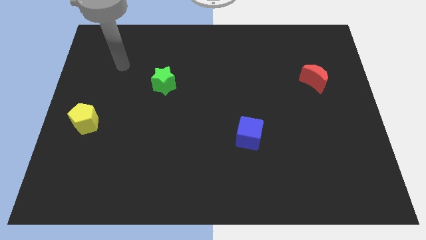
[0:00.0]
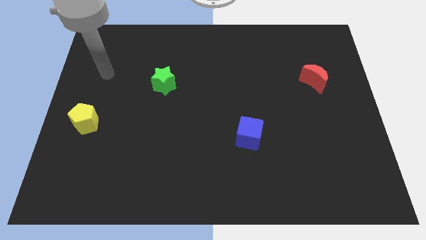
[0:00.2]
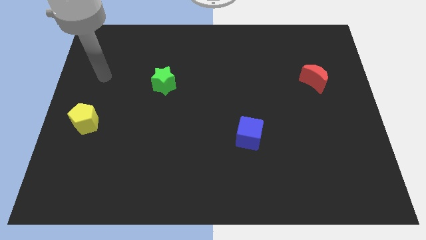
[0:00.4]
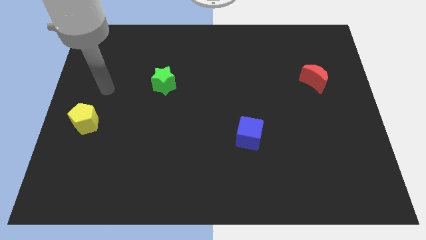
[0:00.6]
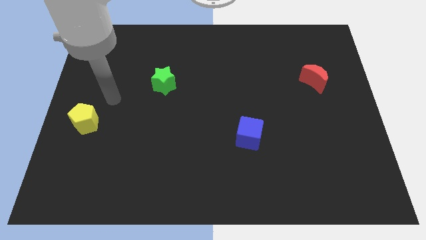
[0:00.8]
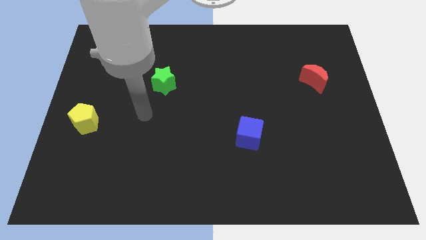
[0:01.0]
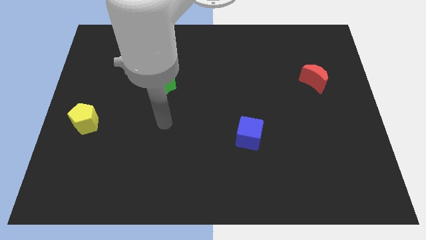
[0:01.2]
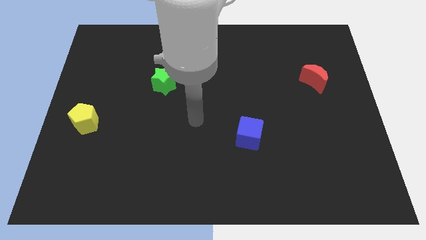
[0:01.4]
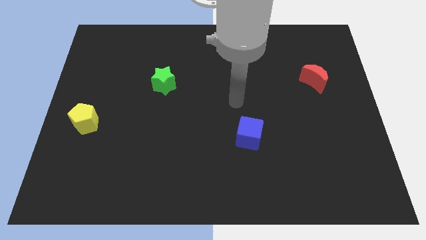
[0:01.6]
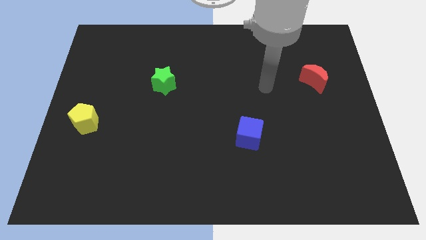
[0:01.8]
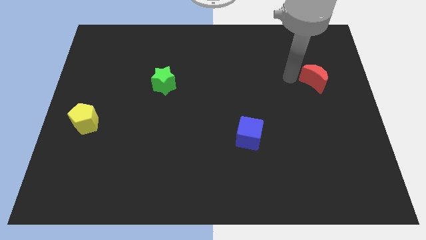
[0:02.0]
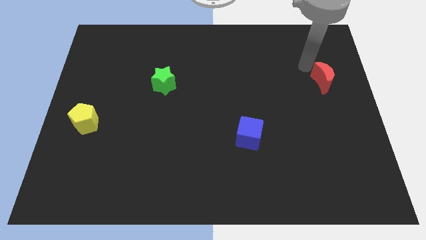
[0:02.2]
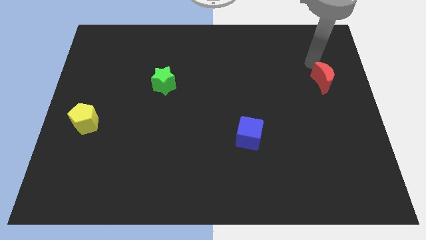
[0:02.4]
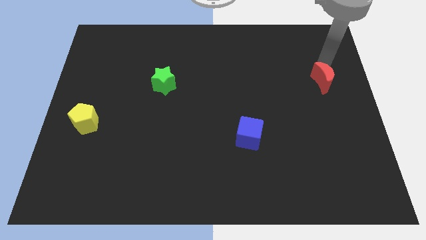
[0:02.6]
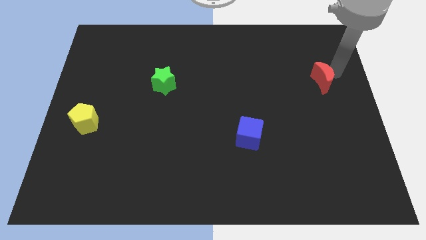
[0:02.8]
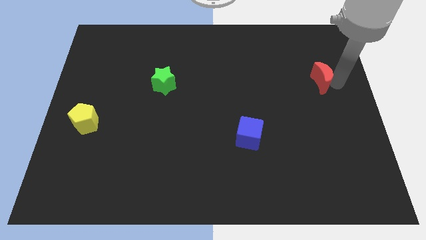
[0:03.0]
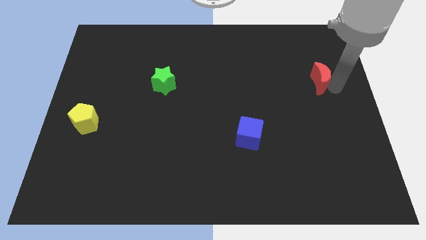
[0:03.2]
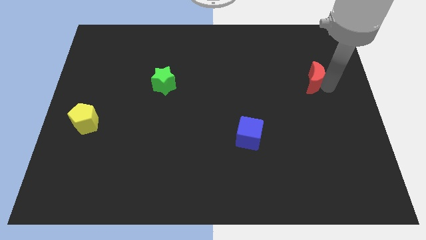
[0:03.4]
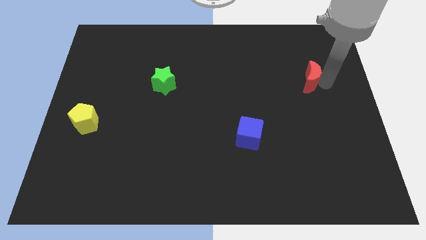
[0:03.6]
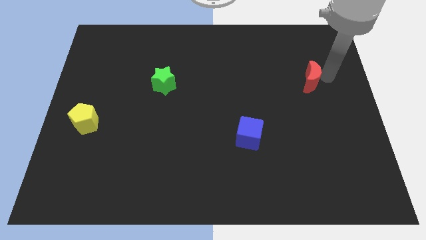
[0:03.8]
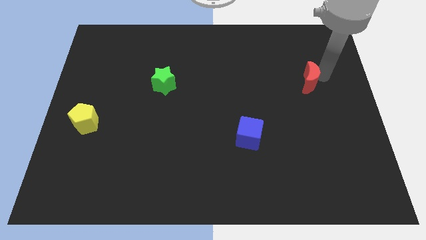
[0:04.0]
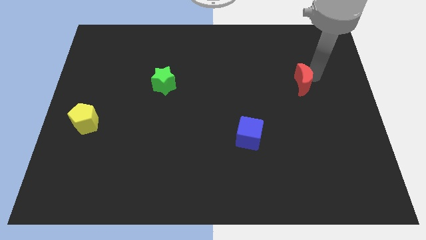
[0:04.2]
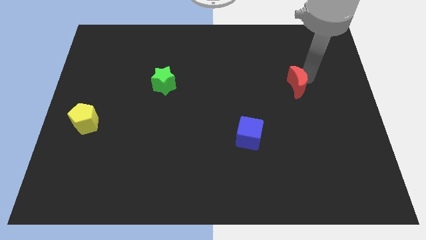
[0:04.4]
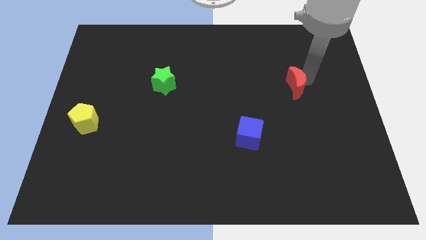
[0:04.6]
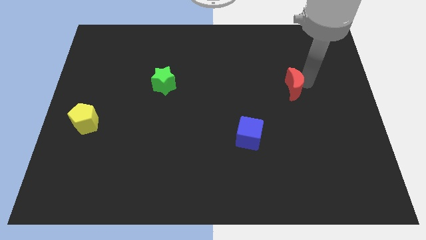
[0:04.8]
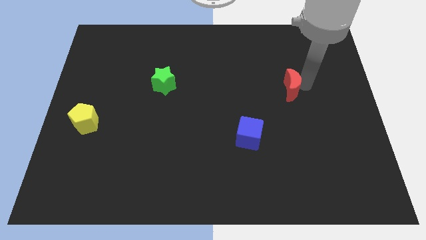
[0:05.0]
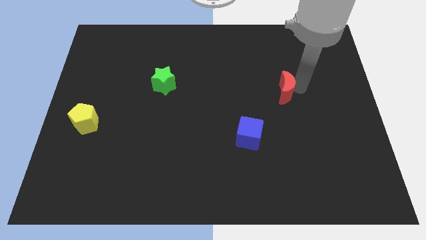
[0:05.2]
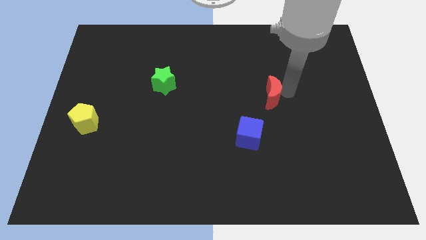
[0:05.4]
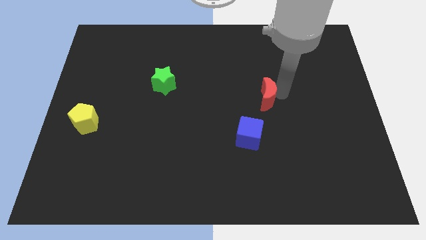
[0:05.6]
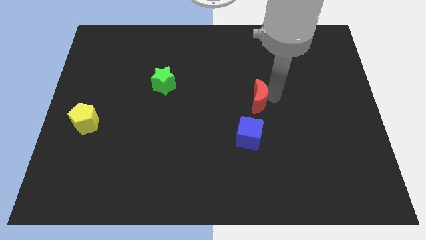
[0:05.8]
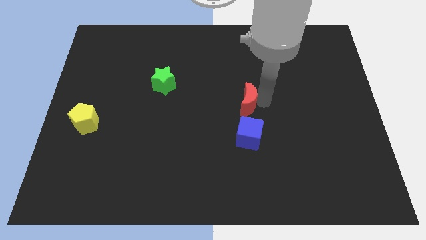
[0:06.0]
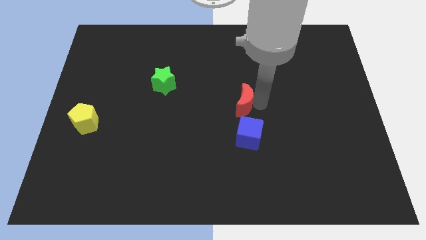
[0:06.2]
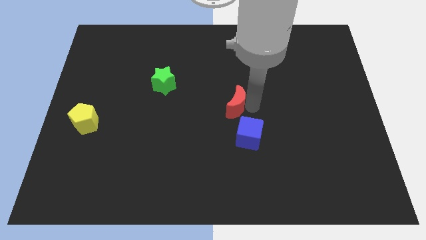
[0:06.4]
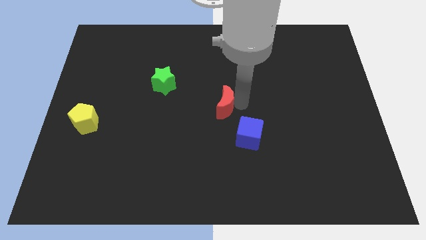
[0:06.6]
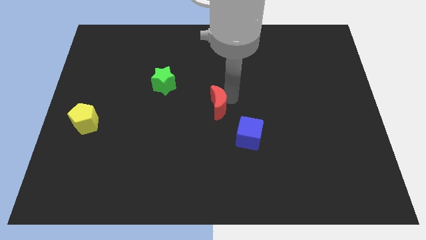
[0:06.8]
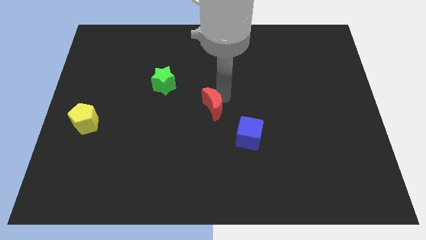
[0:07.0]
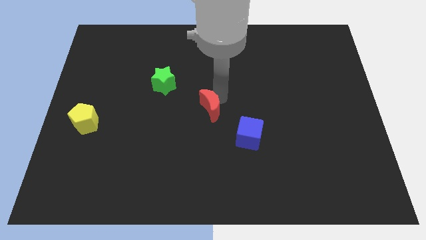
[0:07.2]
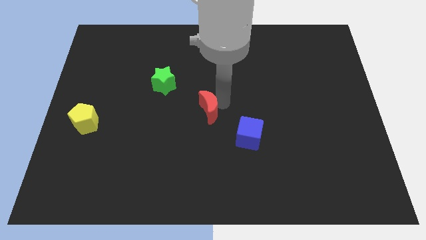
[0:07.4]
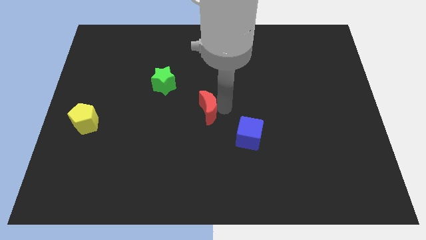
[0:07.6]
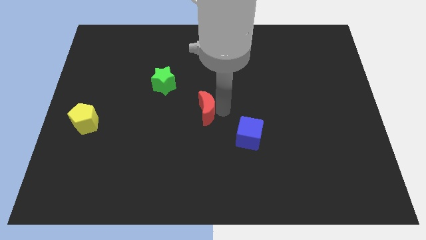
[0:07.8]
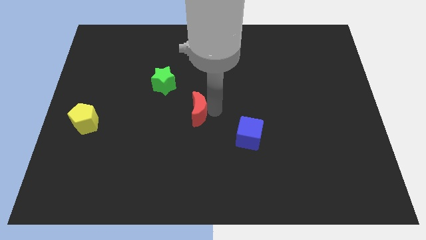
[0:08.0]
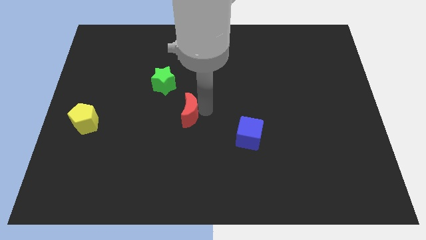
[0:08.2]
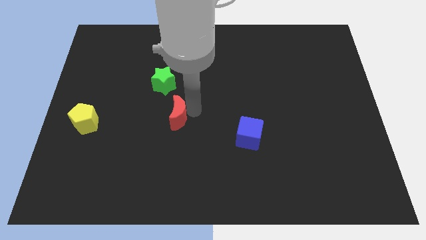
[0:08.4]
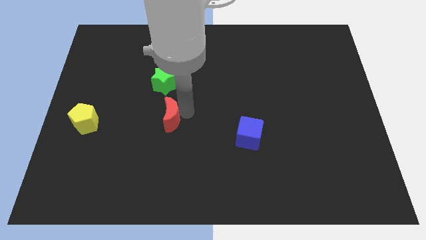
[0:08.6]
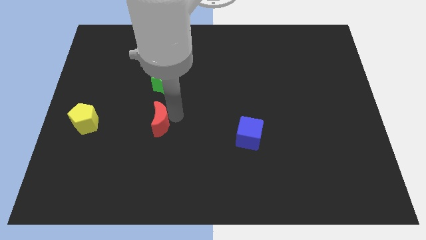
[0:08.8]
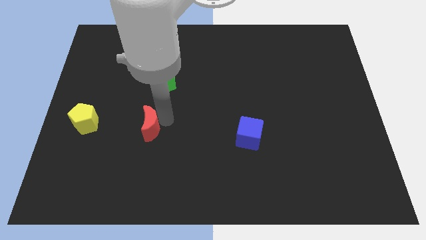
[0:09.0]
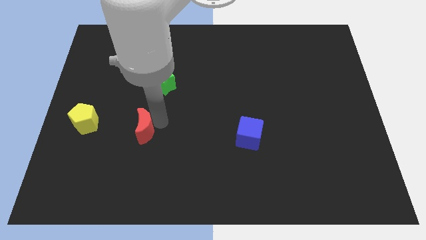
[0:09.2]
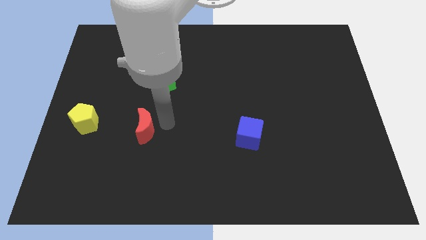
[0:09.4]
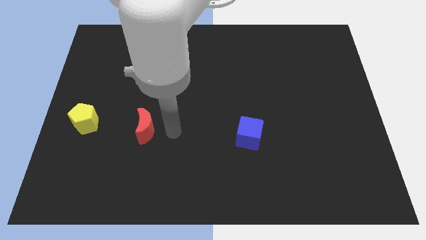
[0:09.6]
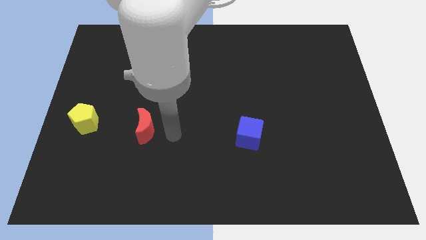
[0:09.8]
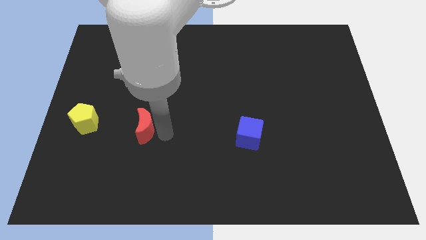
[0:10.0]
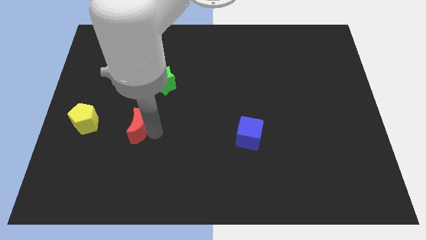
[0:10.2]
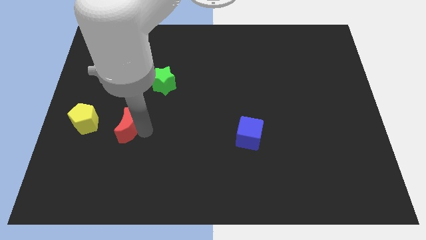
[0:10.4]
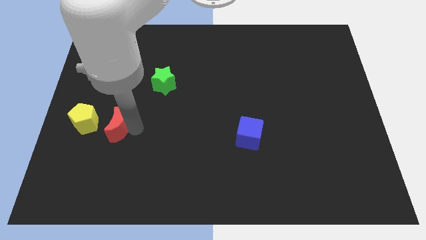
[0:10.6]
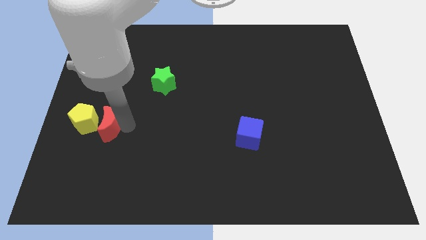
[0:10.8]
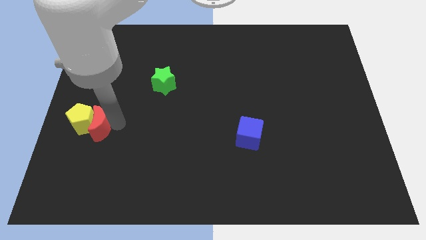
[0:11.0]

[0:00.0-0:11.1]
slide the moon towards the yellow pentagon

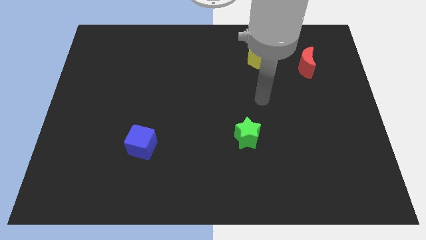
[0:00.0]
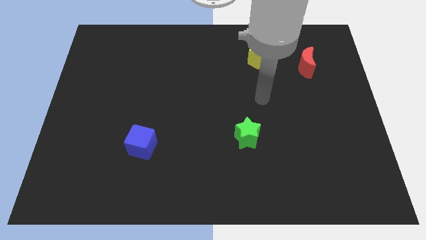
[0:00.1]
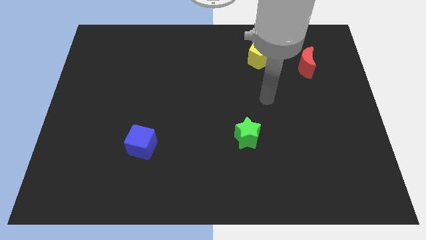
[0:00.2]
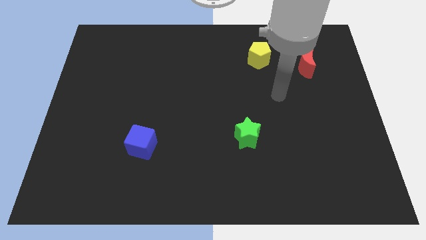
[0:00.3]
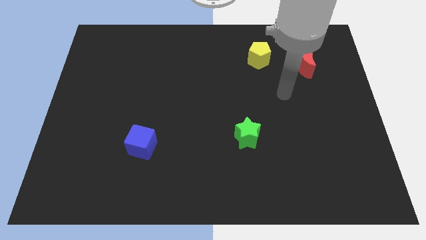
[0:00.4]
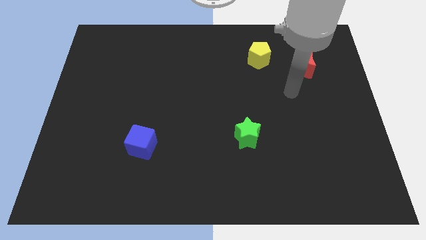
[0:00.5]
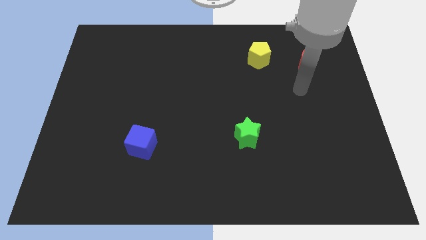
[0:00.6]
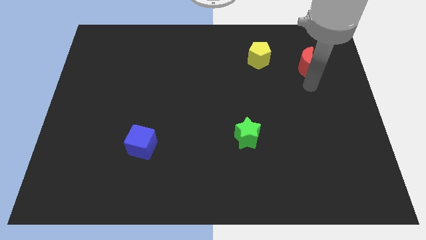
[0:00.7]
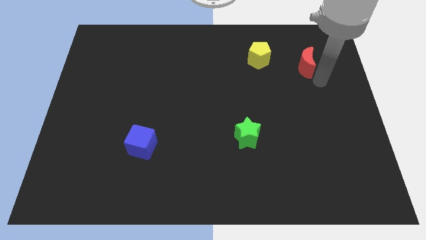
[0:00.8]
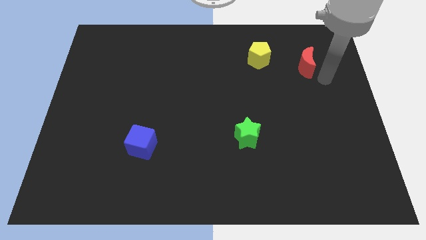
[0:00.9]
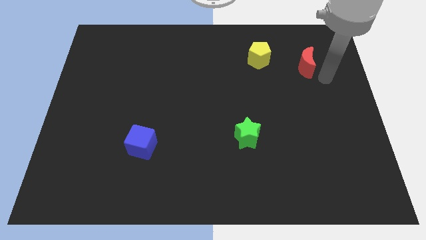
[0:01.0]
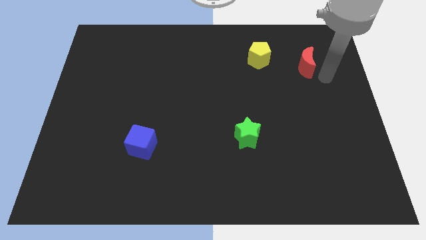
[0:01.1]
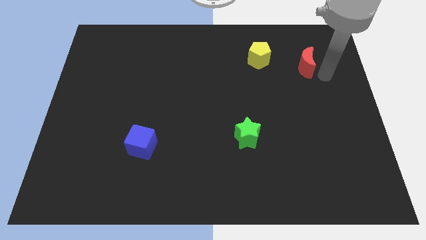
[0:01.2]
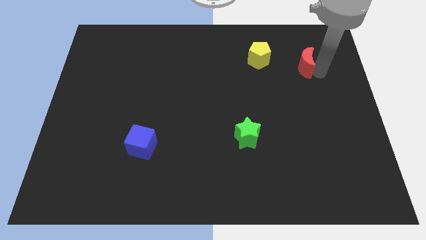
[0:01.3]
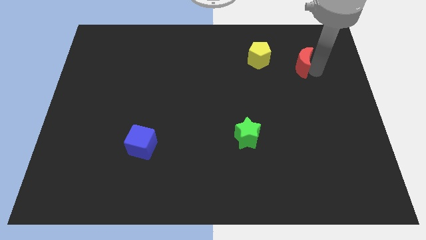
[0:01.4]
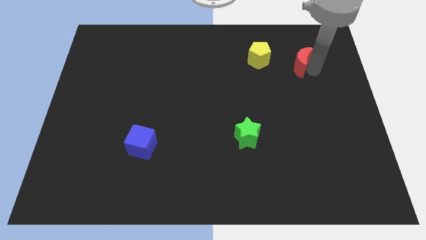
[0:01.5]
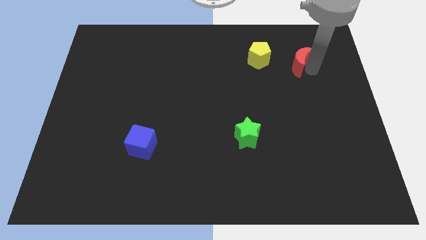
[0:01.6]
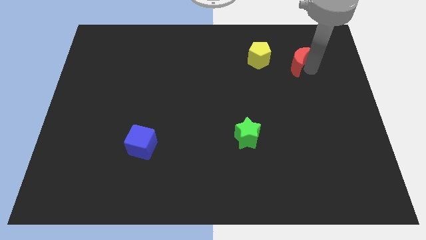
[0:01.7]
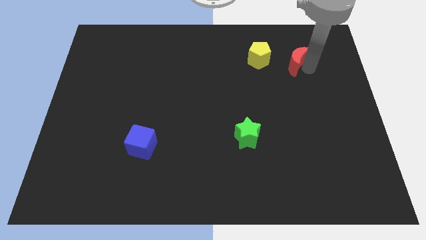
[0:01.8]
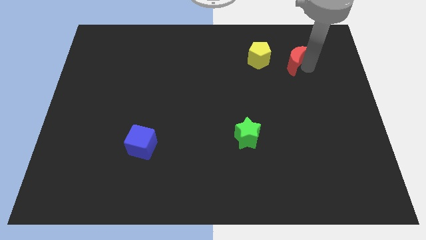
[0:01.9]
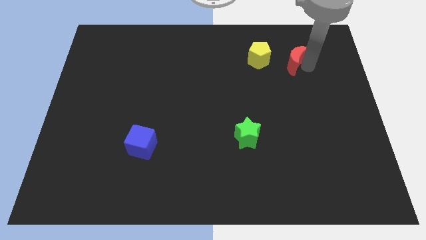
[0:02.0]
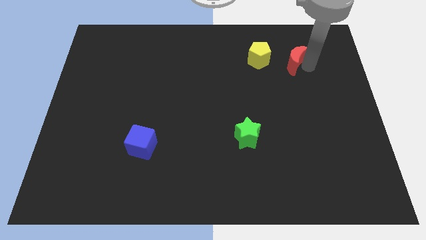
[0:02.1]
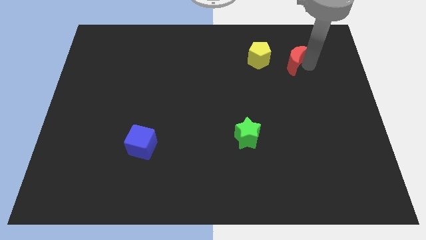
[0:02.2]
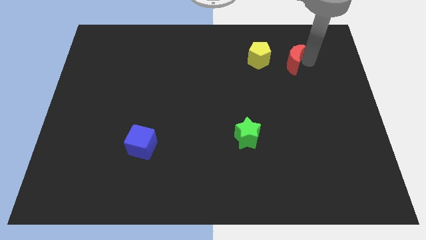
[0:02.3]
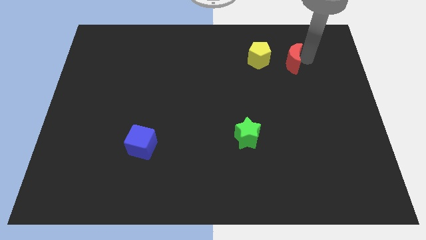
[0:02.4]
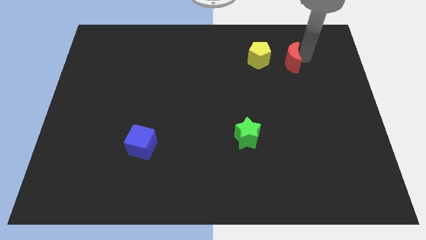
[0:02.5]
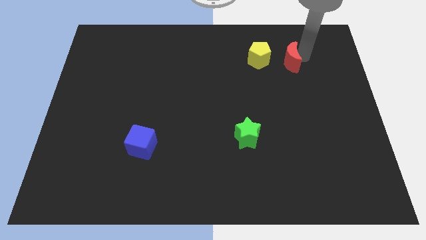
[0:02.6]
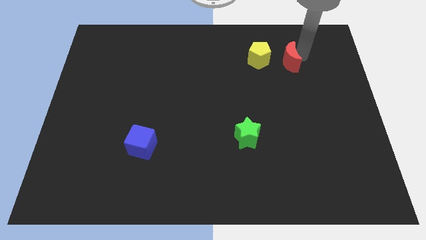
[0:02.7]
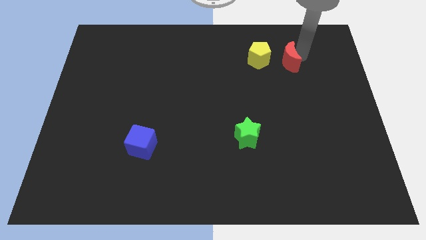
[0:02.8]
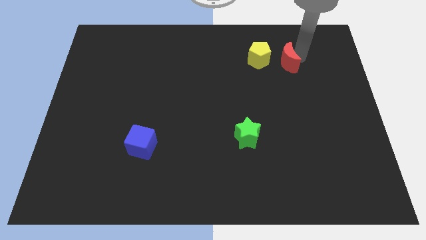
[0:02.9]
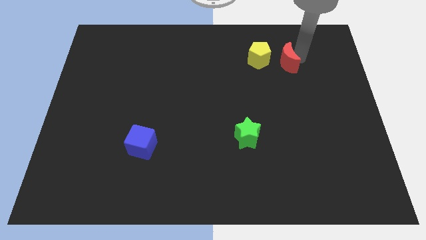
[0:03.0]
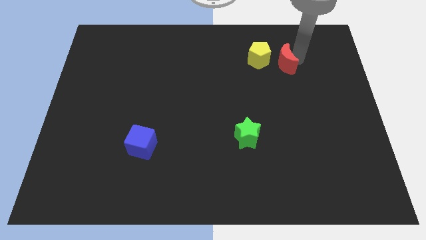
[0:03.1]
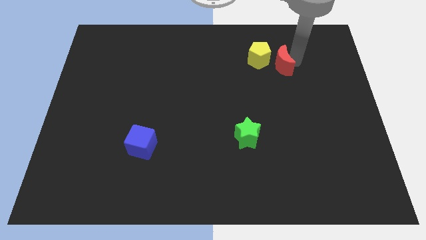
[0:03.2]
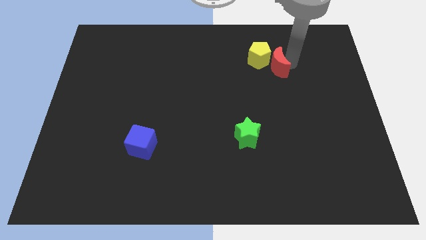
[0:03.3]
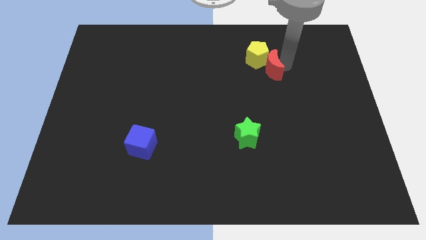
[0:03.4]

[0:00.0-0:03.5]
push the moon close to the yellow pentagon
